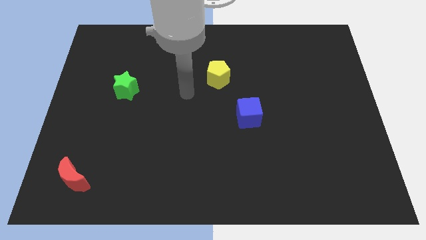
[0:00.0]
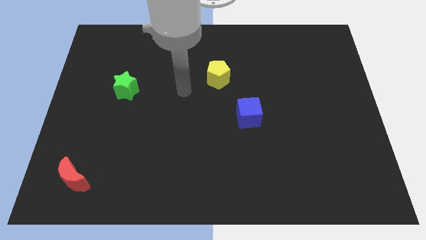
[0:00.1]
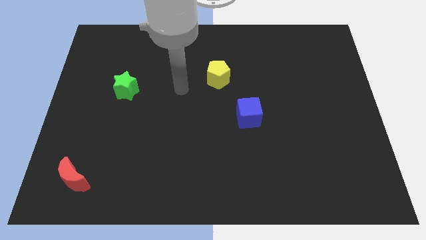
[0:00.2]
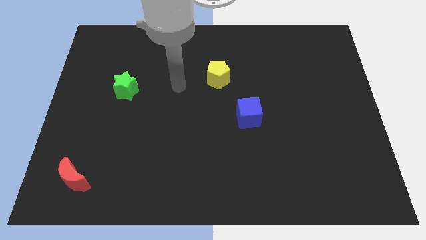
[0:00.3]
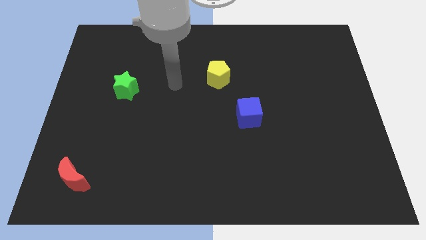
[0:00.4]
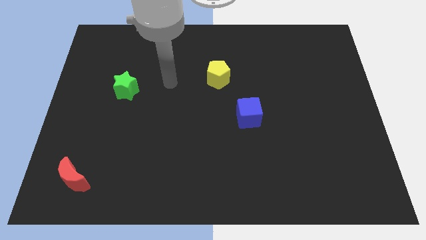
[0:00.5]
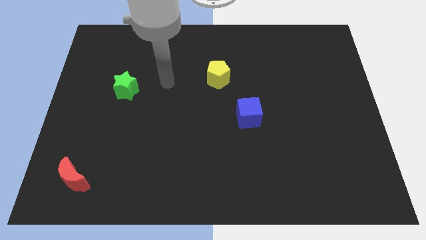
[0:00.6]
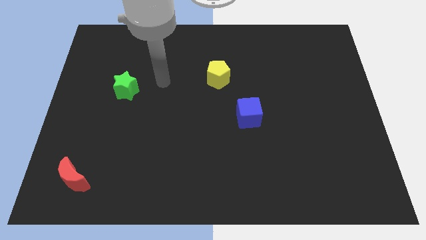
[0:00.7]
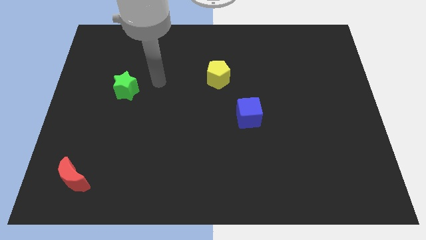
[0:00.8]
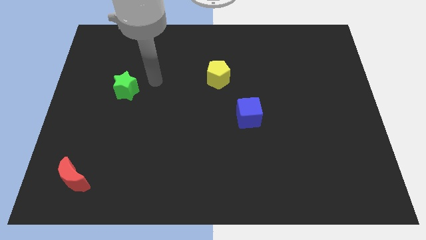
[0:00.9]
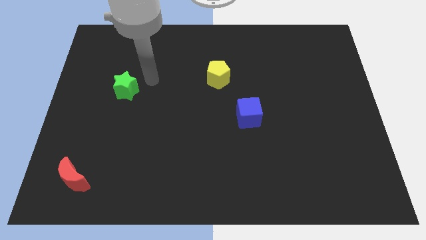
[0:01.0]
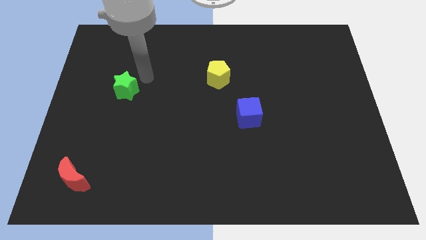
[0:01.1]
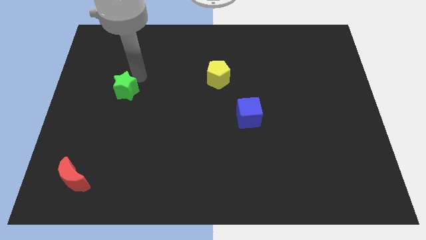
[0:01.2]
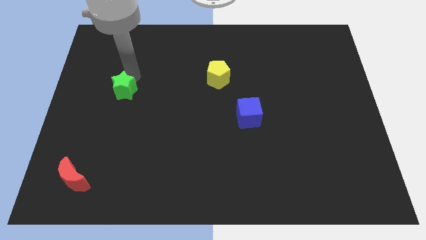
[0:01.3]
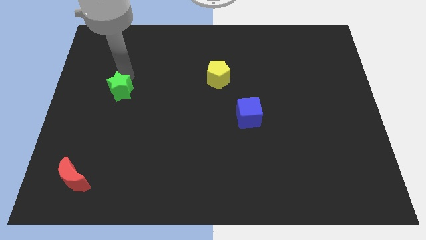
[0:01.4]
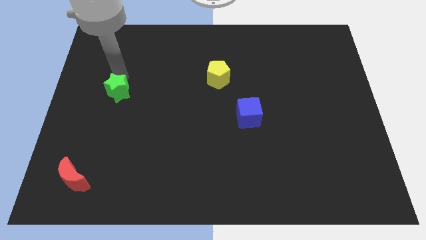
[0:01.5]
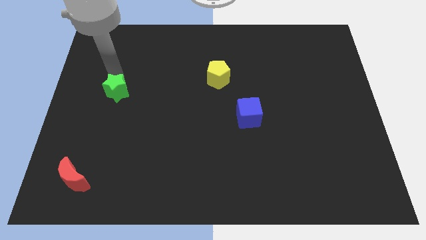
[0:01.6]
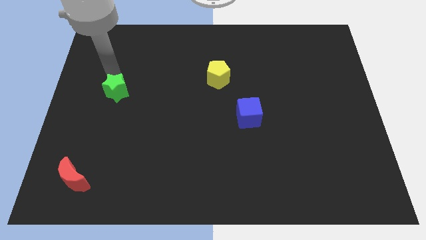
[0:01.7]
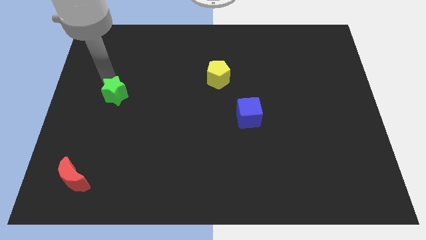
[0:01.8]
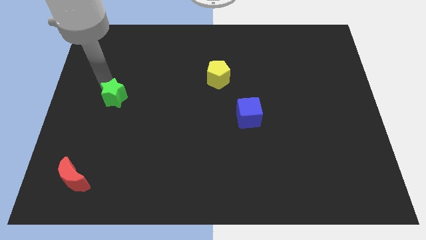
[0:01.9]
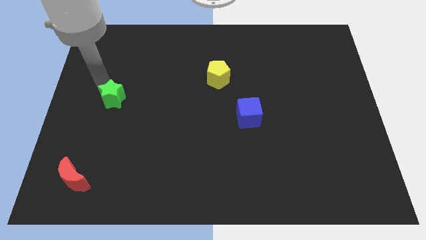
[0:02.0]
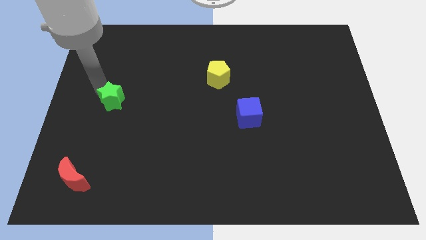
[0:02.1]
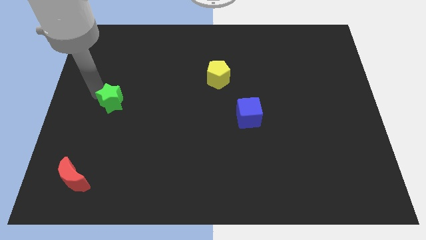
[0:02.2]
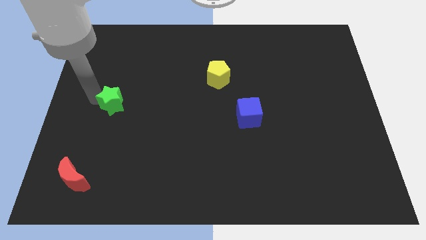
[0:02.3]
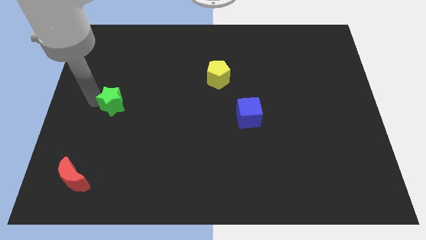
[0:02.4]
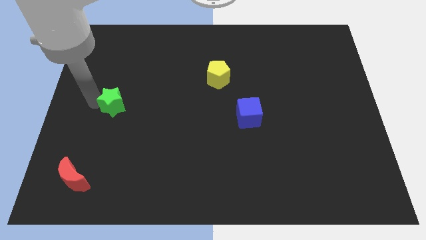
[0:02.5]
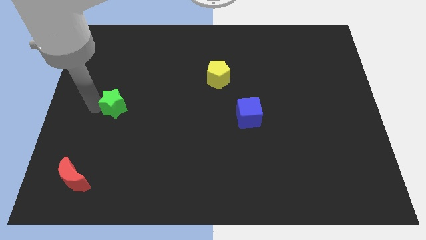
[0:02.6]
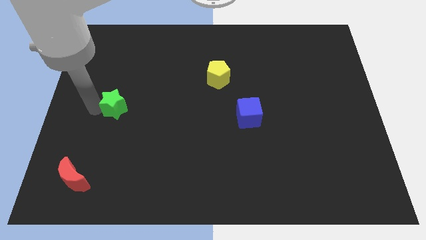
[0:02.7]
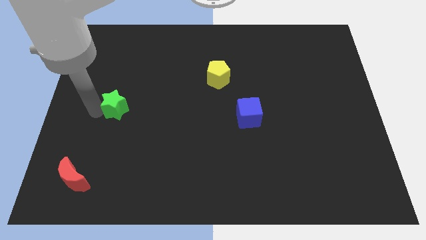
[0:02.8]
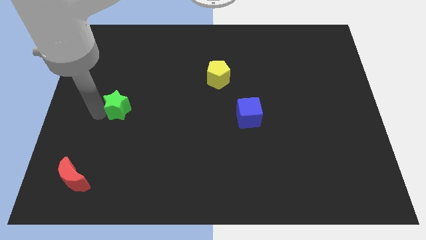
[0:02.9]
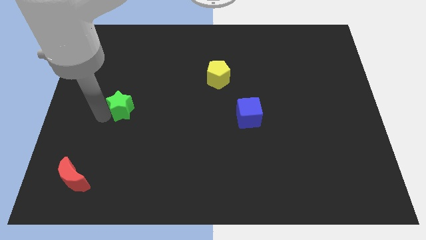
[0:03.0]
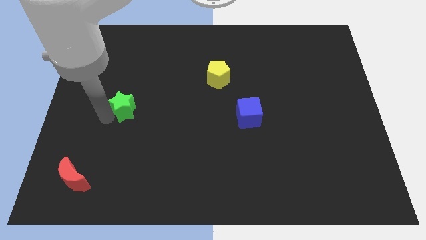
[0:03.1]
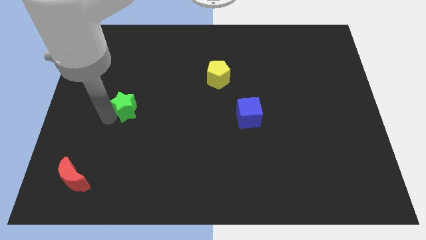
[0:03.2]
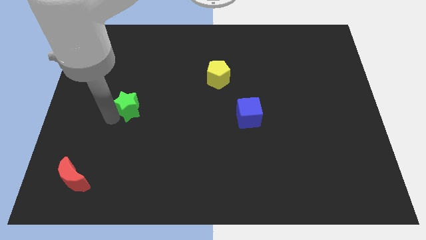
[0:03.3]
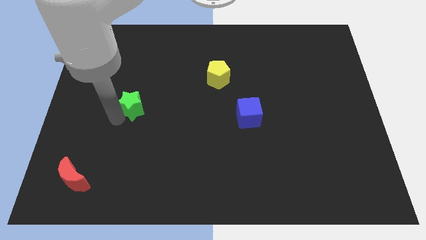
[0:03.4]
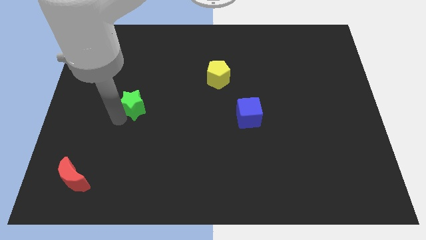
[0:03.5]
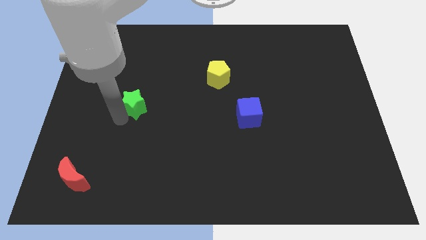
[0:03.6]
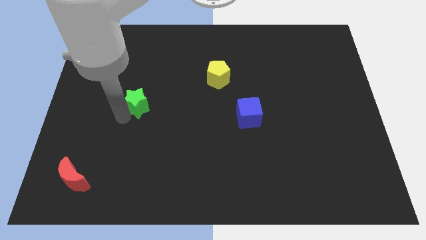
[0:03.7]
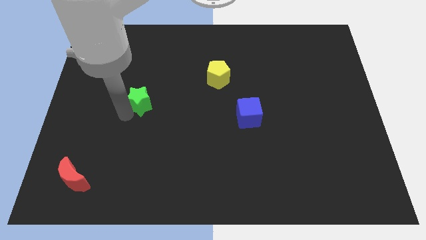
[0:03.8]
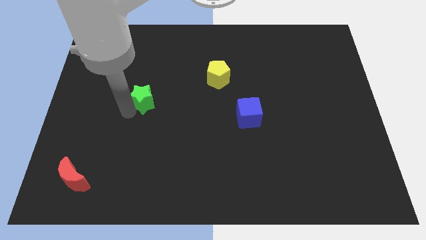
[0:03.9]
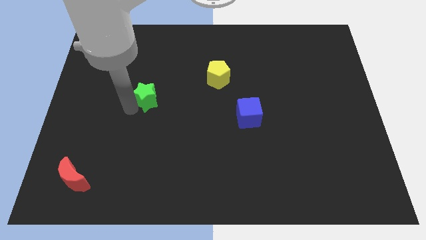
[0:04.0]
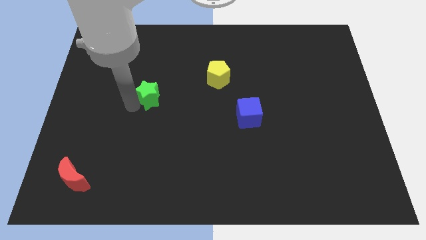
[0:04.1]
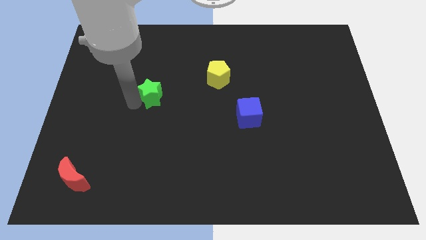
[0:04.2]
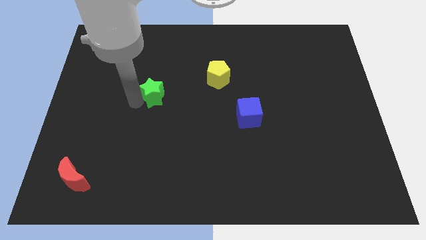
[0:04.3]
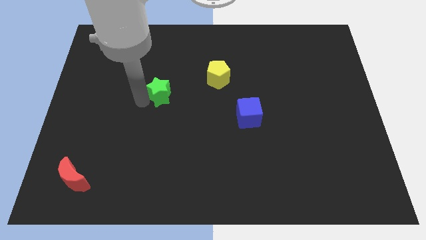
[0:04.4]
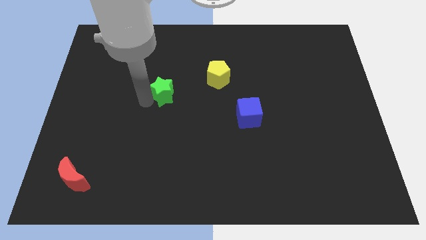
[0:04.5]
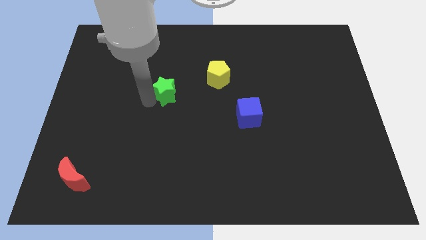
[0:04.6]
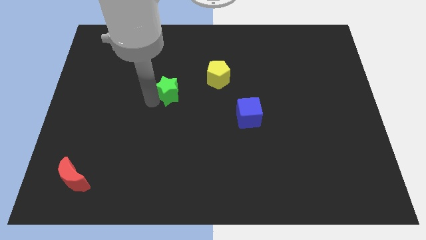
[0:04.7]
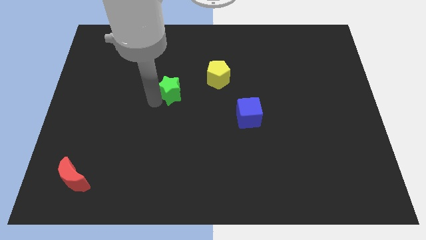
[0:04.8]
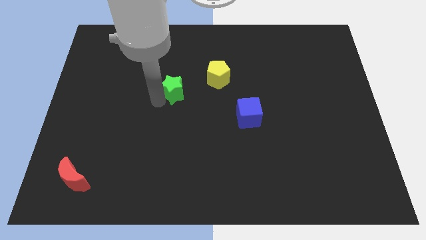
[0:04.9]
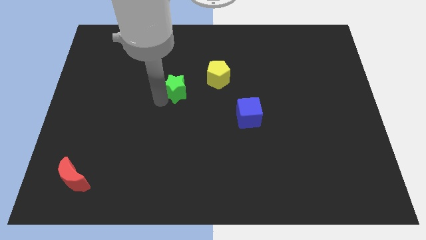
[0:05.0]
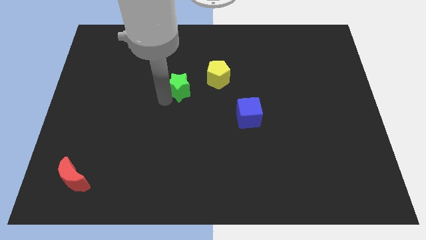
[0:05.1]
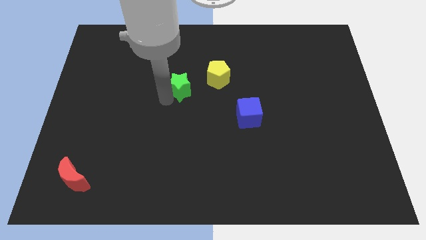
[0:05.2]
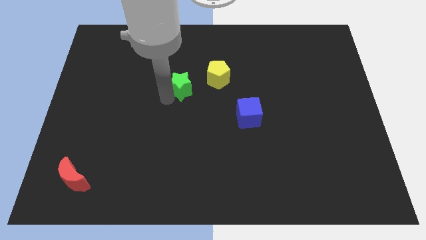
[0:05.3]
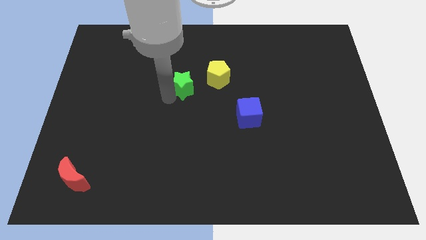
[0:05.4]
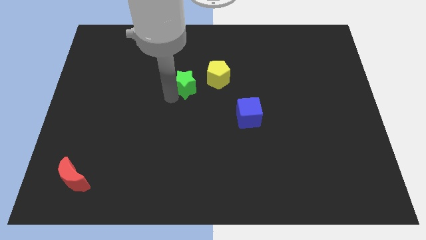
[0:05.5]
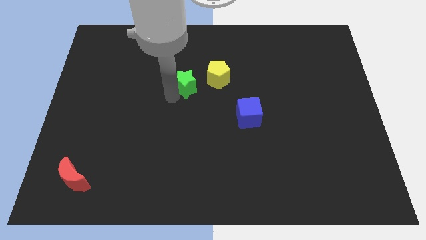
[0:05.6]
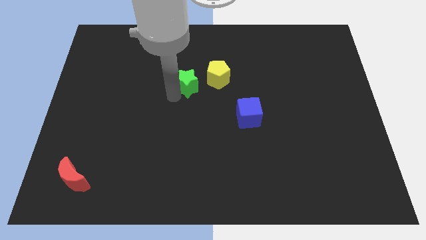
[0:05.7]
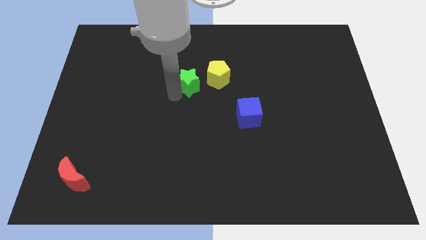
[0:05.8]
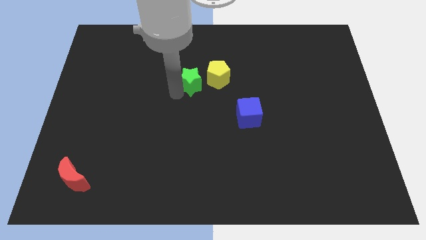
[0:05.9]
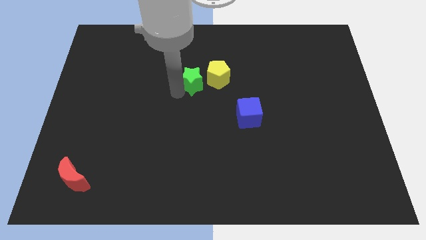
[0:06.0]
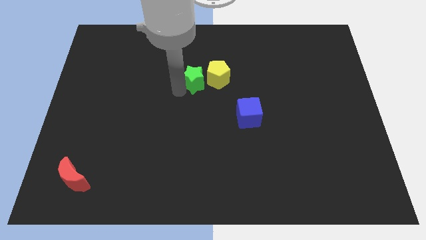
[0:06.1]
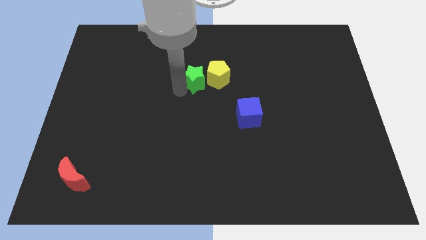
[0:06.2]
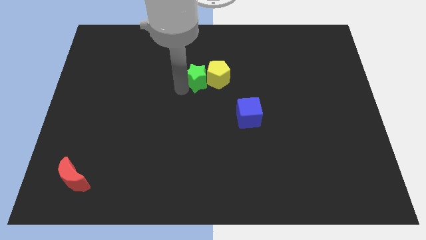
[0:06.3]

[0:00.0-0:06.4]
move the green star towards the pentagon

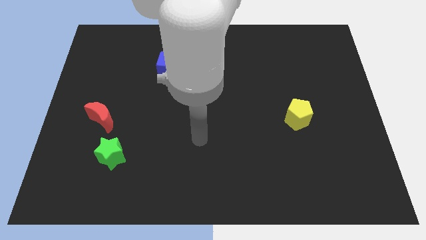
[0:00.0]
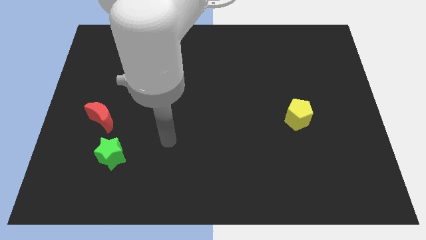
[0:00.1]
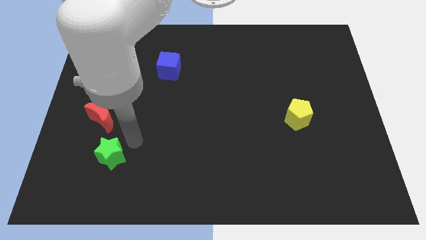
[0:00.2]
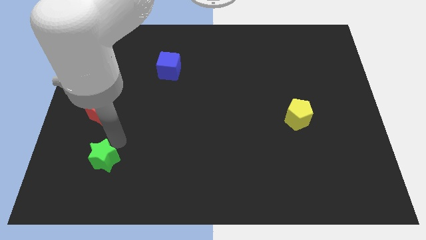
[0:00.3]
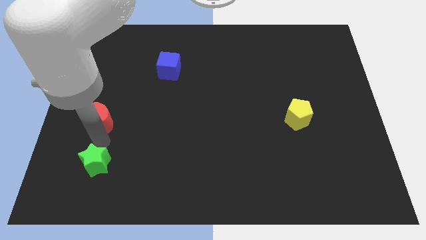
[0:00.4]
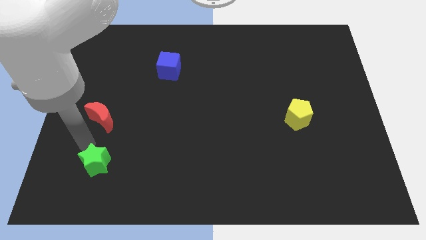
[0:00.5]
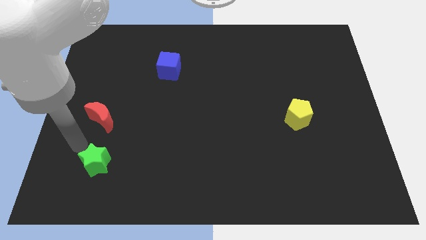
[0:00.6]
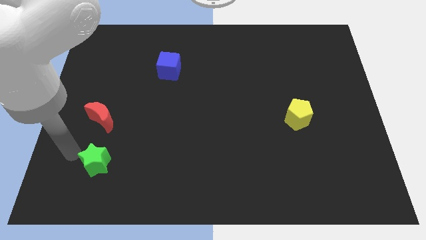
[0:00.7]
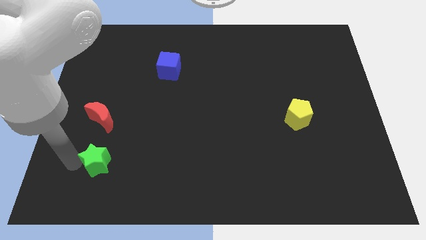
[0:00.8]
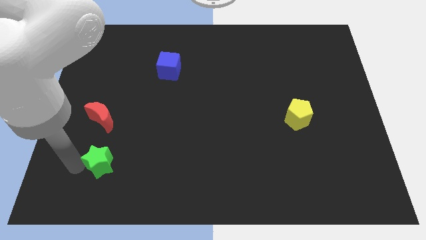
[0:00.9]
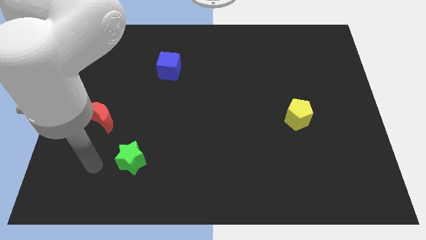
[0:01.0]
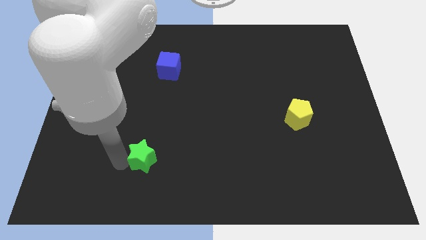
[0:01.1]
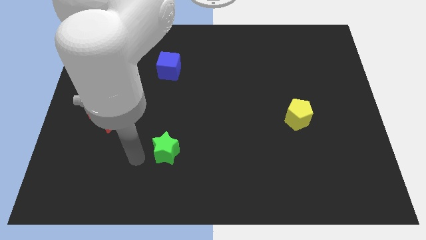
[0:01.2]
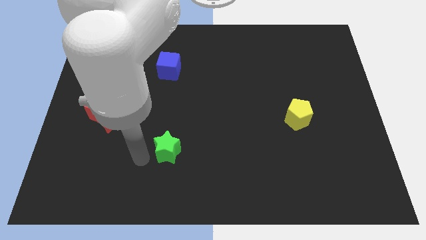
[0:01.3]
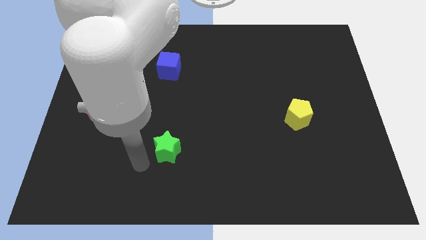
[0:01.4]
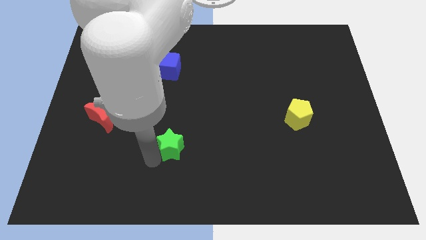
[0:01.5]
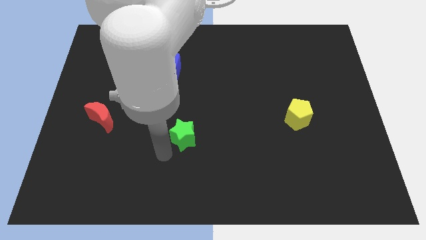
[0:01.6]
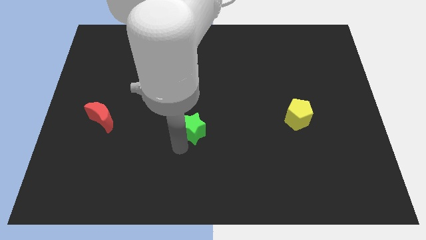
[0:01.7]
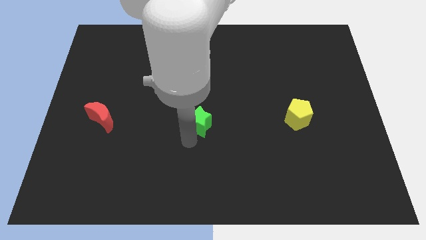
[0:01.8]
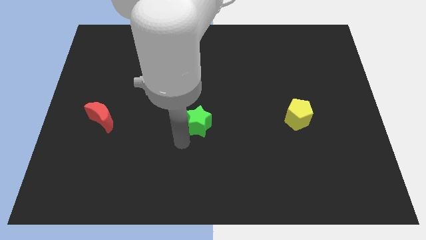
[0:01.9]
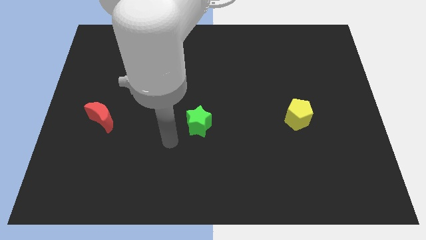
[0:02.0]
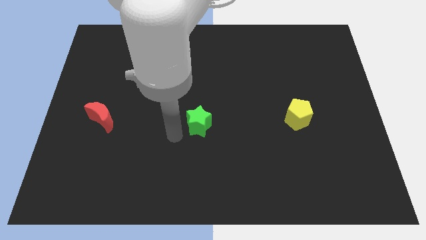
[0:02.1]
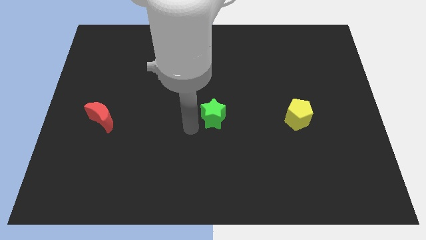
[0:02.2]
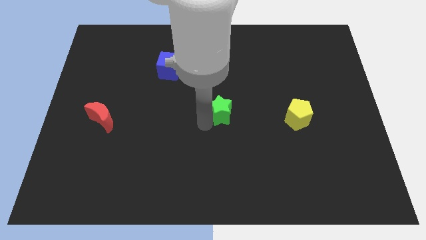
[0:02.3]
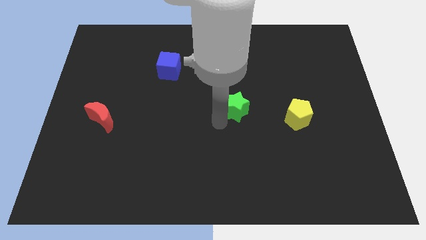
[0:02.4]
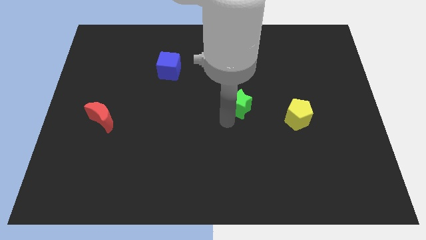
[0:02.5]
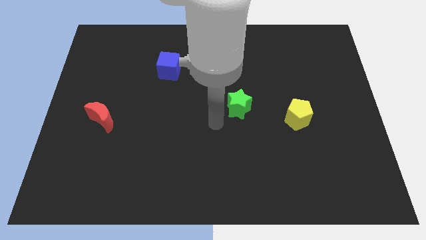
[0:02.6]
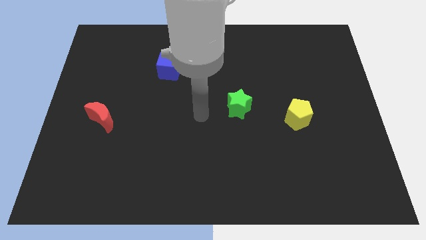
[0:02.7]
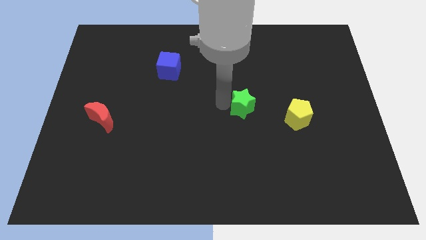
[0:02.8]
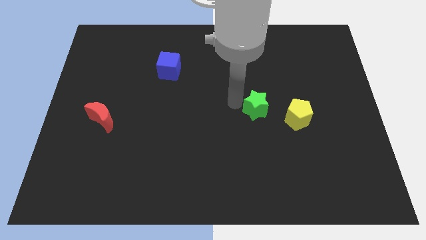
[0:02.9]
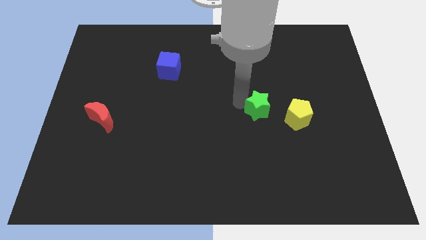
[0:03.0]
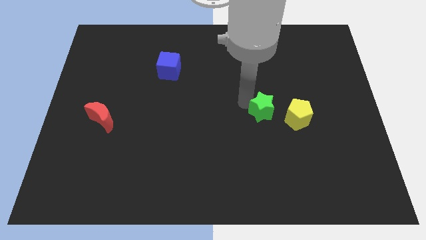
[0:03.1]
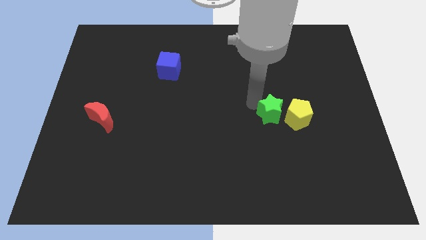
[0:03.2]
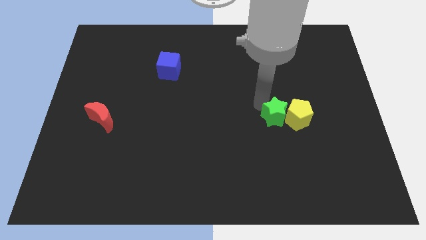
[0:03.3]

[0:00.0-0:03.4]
move the star next to the pentagon
